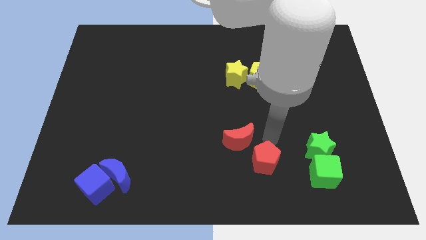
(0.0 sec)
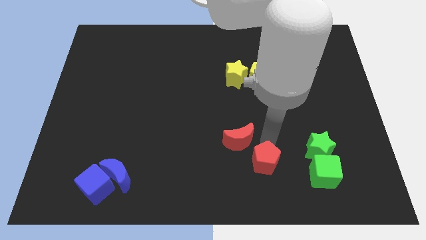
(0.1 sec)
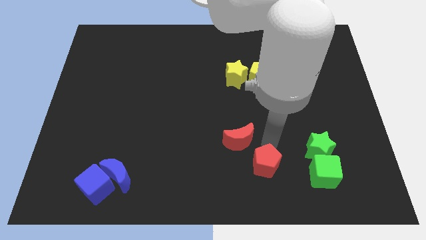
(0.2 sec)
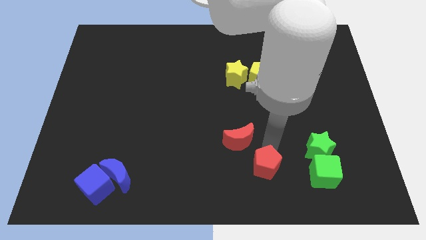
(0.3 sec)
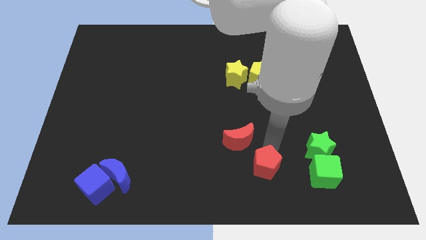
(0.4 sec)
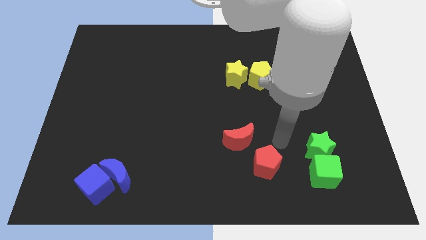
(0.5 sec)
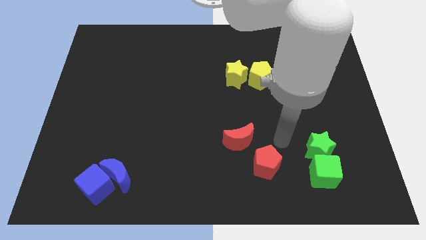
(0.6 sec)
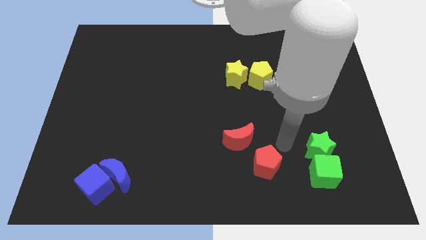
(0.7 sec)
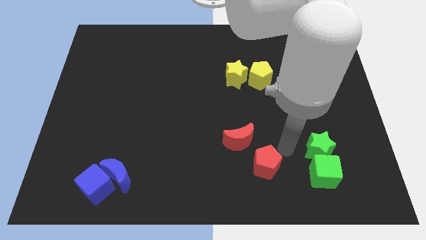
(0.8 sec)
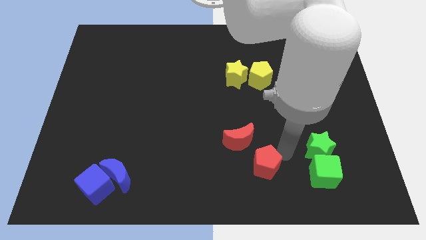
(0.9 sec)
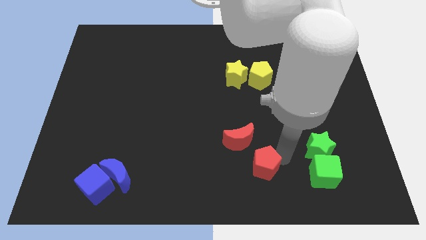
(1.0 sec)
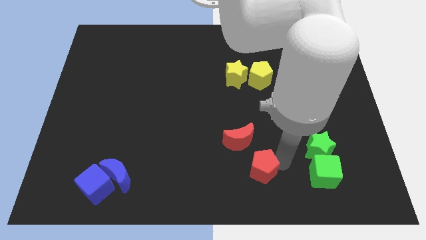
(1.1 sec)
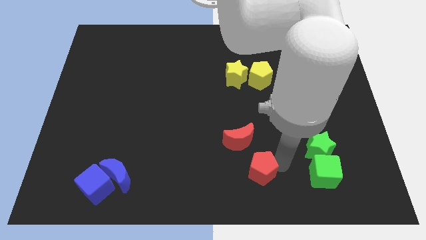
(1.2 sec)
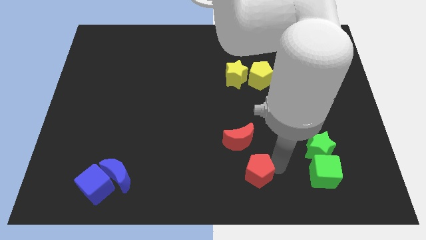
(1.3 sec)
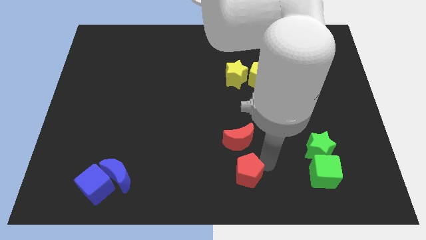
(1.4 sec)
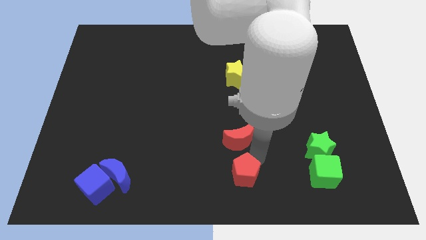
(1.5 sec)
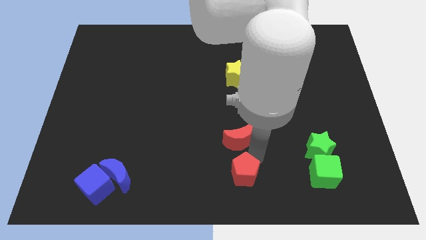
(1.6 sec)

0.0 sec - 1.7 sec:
place the red pentagon below the red moon

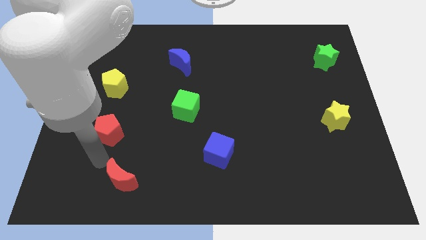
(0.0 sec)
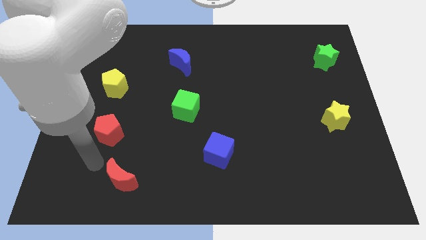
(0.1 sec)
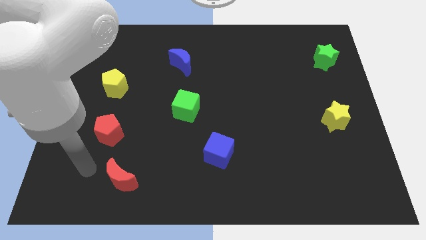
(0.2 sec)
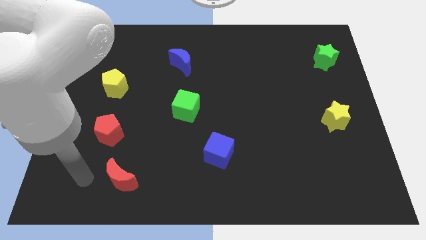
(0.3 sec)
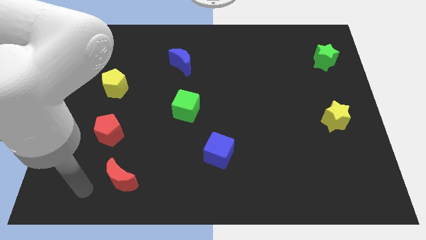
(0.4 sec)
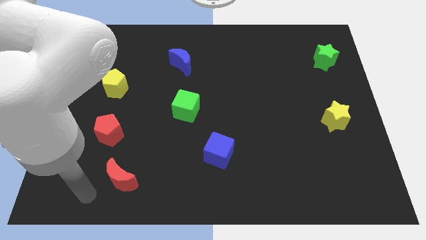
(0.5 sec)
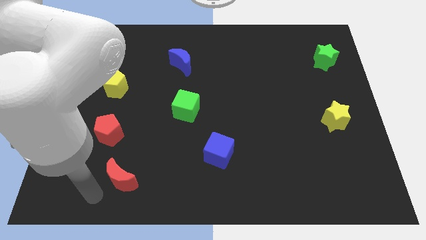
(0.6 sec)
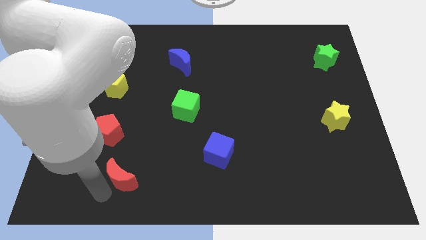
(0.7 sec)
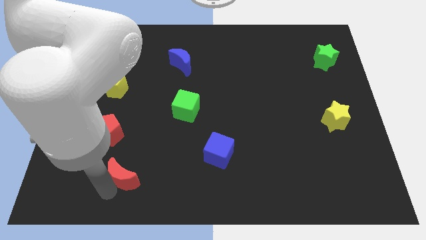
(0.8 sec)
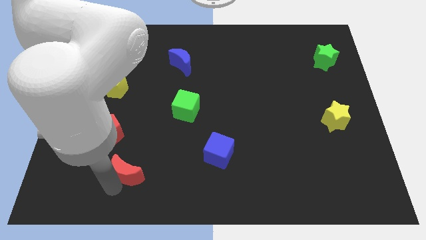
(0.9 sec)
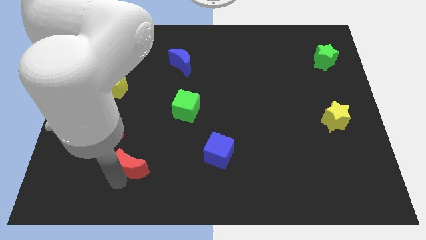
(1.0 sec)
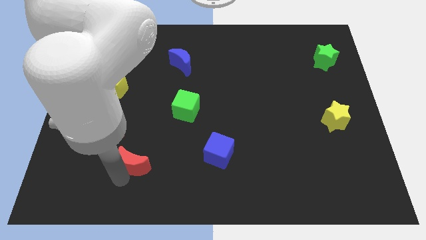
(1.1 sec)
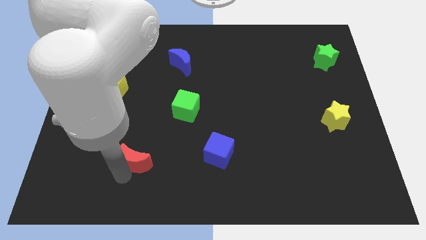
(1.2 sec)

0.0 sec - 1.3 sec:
place the red moon diagonal to the red pentagon

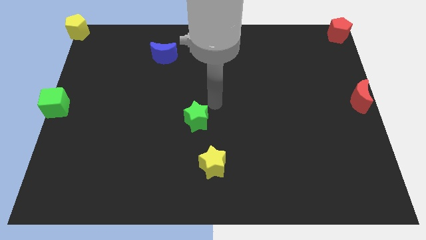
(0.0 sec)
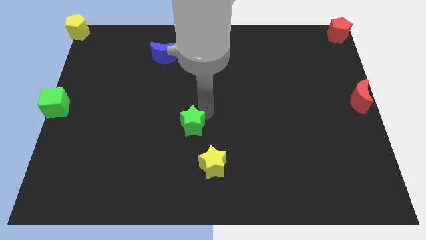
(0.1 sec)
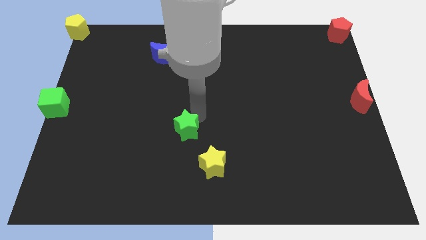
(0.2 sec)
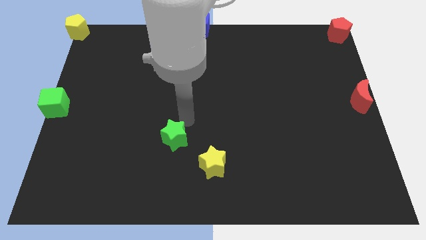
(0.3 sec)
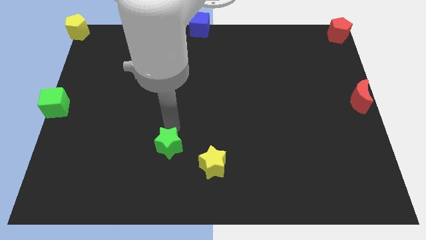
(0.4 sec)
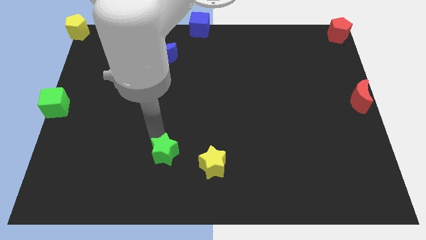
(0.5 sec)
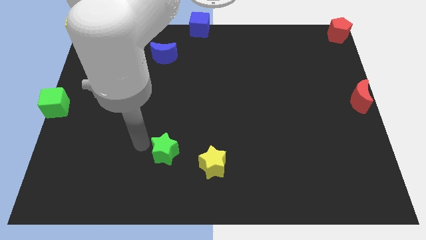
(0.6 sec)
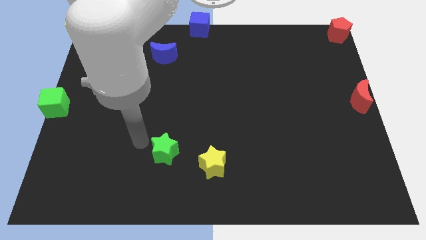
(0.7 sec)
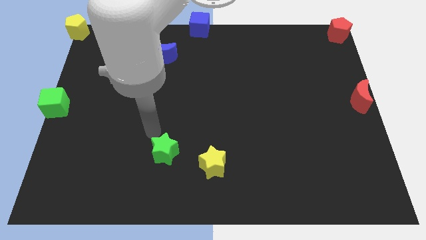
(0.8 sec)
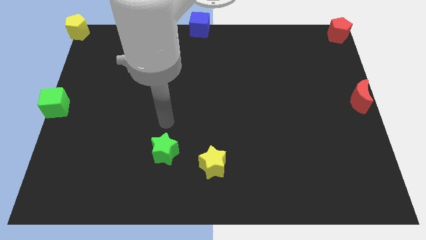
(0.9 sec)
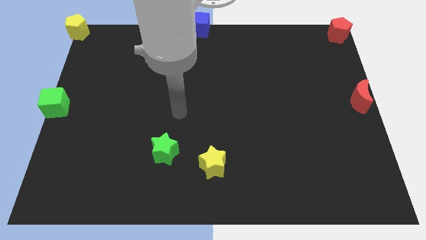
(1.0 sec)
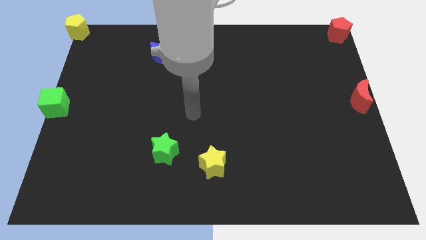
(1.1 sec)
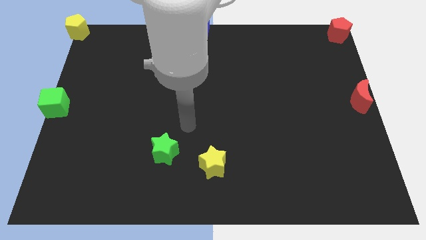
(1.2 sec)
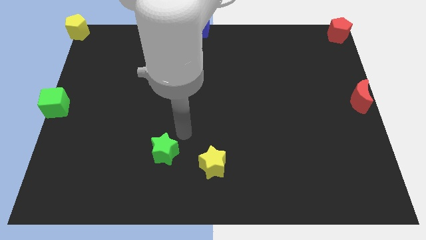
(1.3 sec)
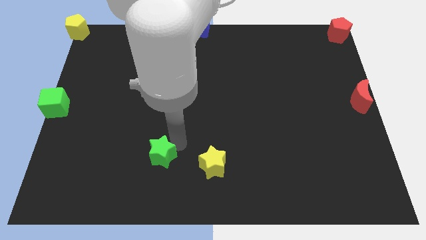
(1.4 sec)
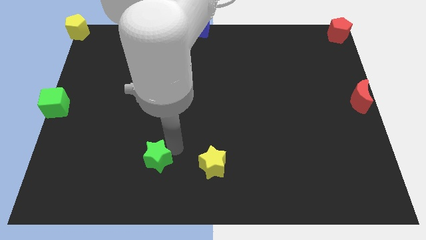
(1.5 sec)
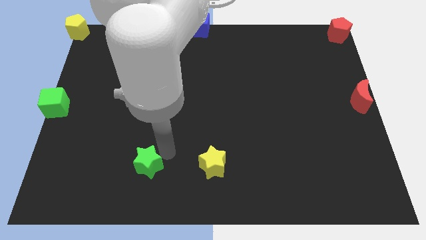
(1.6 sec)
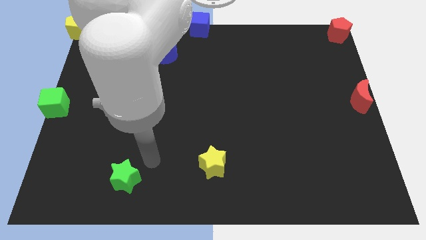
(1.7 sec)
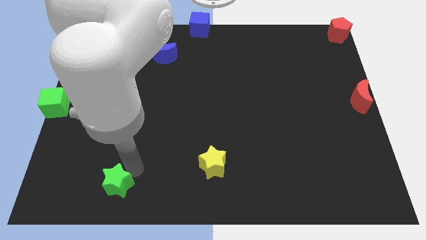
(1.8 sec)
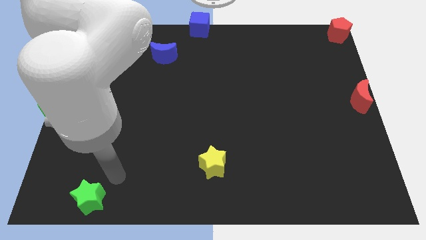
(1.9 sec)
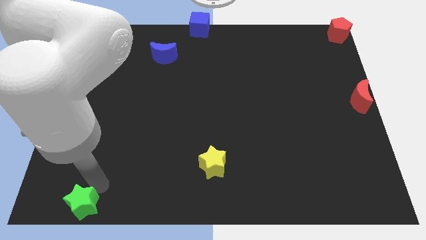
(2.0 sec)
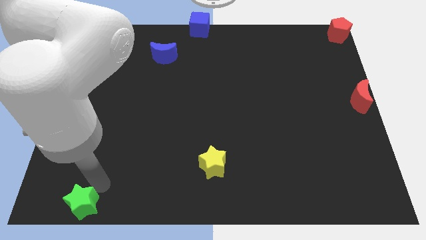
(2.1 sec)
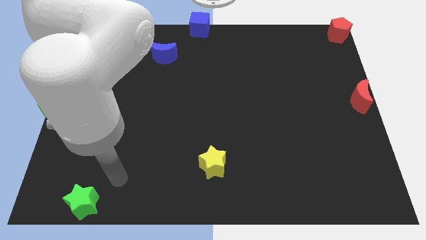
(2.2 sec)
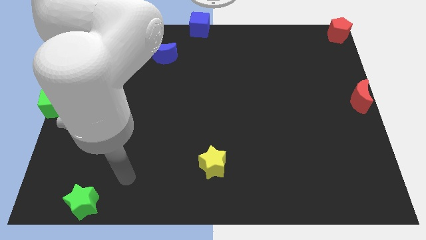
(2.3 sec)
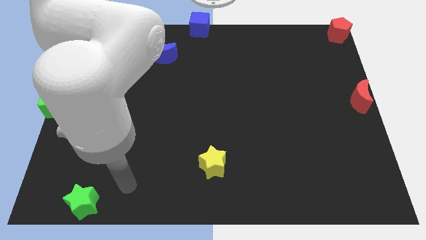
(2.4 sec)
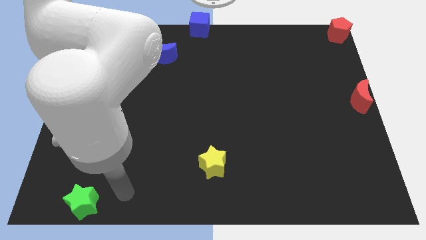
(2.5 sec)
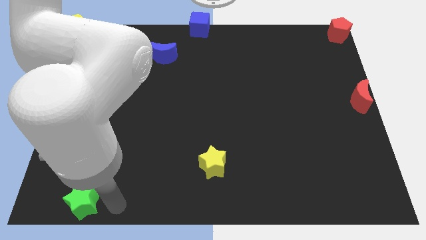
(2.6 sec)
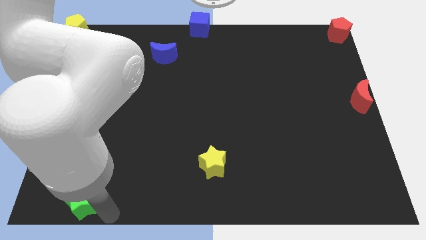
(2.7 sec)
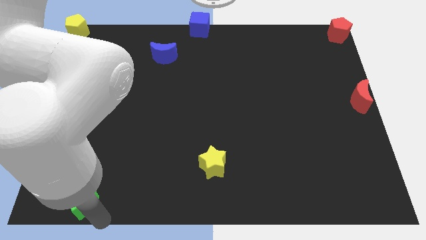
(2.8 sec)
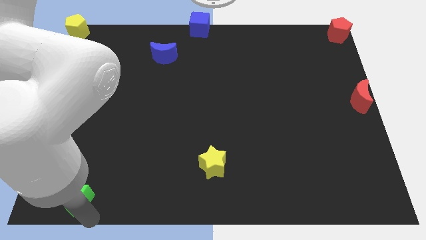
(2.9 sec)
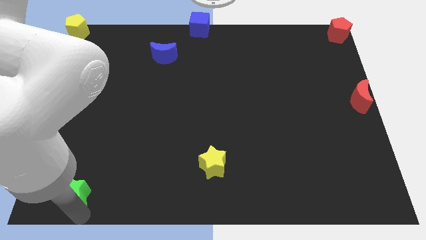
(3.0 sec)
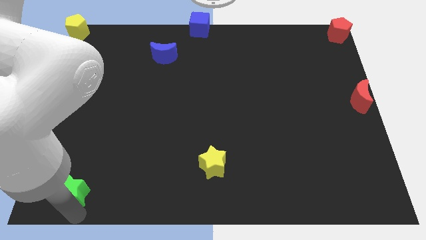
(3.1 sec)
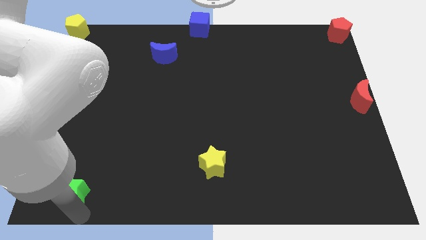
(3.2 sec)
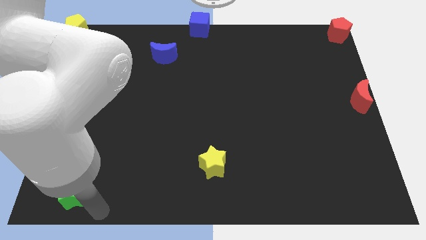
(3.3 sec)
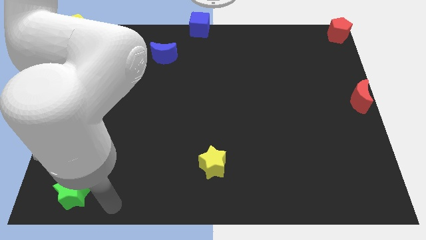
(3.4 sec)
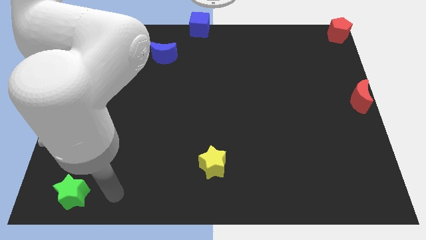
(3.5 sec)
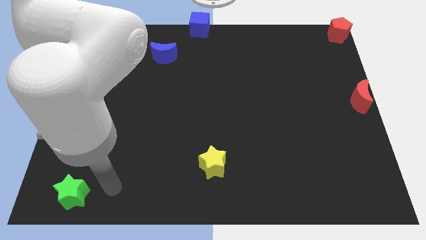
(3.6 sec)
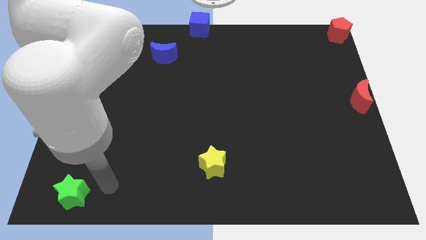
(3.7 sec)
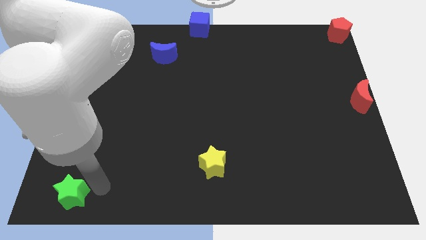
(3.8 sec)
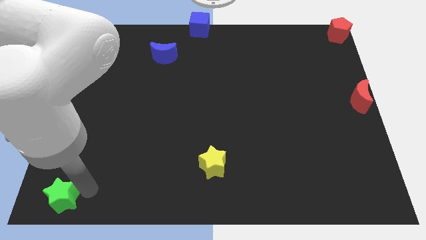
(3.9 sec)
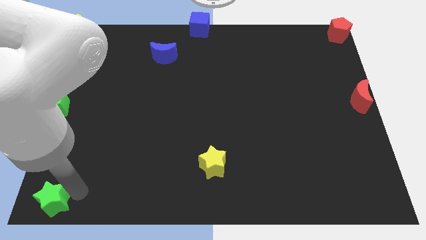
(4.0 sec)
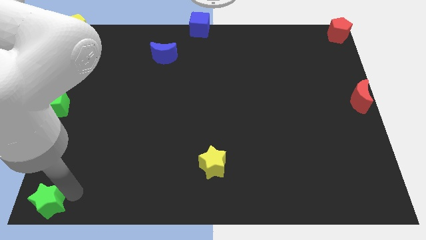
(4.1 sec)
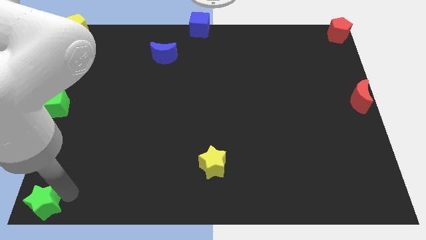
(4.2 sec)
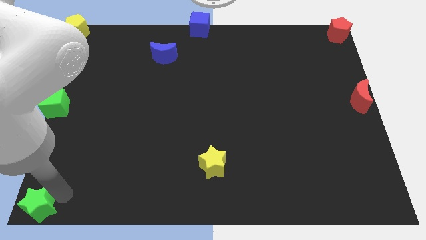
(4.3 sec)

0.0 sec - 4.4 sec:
move the green star to the bottom left corner of the board

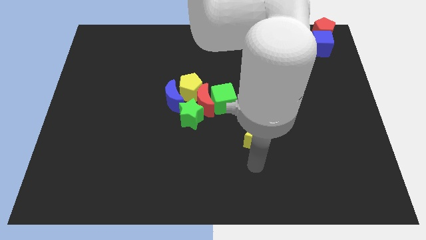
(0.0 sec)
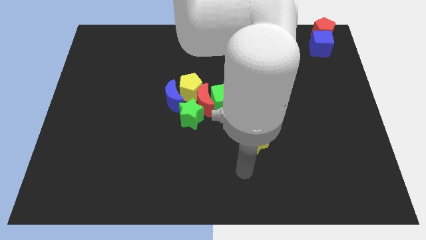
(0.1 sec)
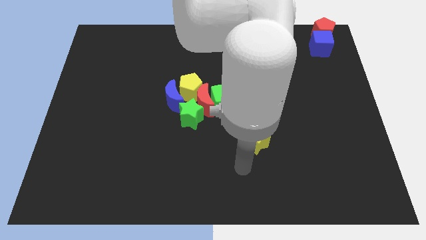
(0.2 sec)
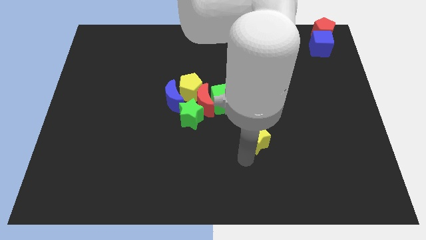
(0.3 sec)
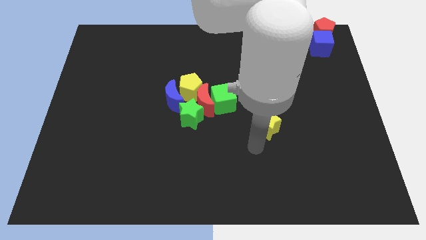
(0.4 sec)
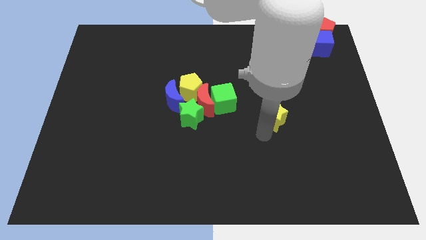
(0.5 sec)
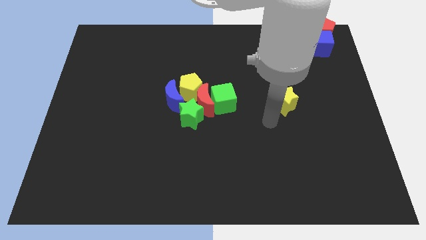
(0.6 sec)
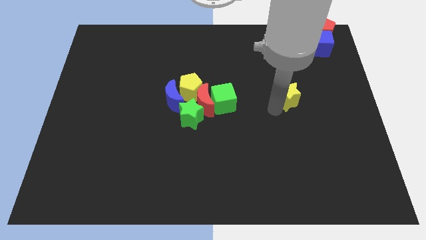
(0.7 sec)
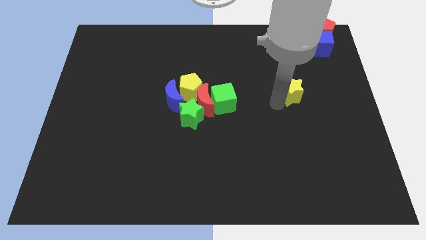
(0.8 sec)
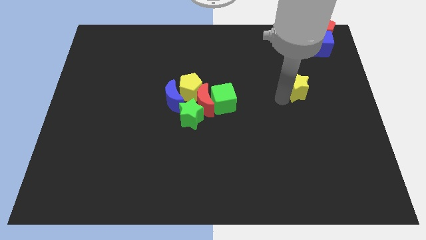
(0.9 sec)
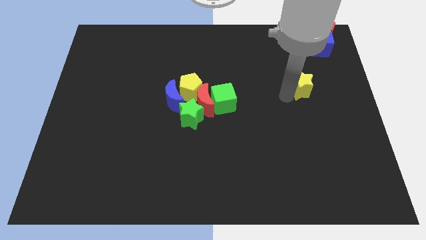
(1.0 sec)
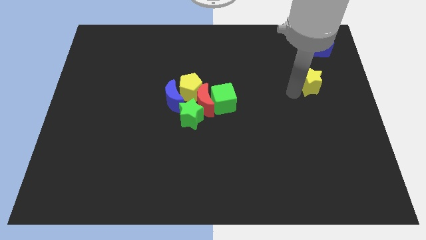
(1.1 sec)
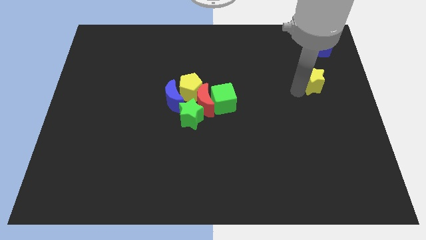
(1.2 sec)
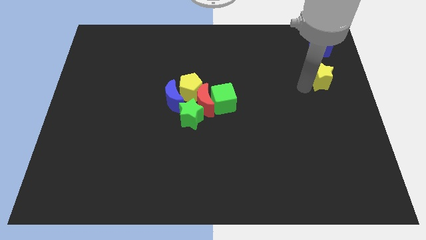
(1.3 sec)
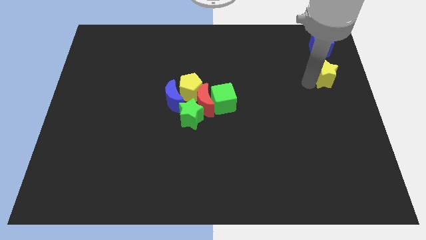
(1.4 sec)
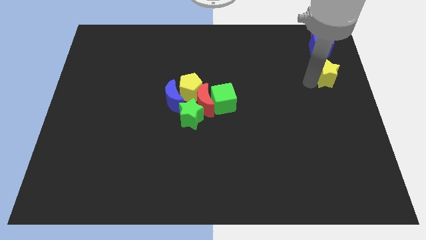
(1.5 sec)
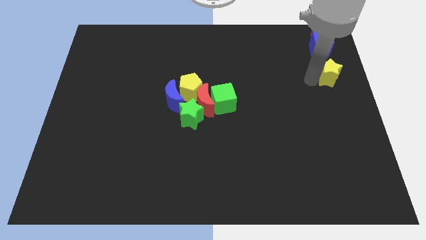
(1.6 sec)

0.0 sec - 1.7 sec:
move the yellow star to the bottom of the blue cube

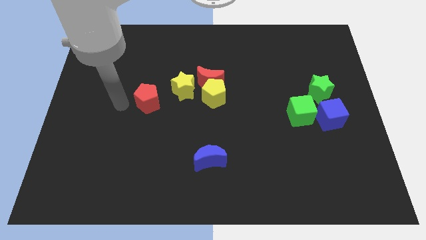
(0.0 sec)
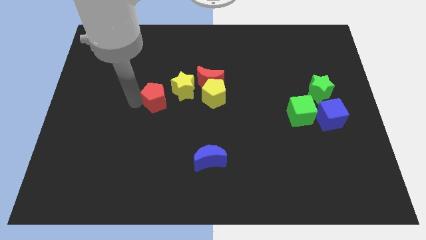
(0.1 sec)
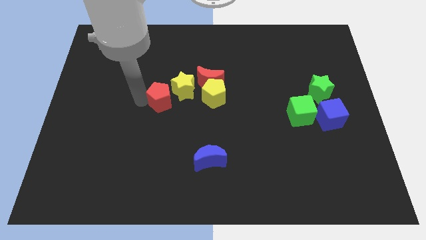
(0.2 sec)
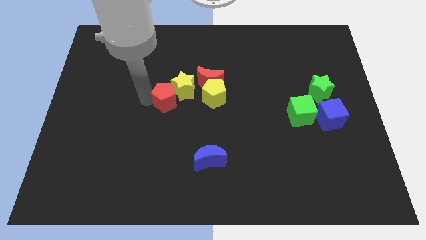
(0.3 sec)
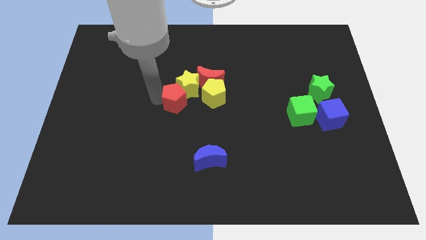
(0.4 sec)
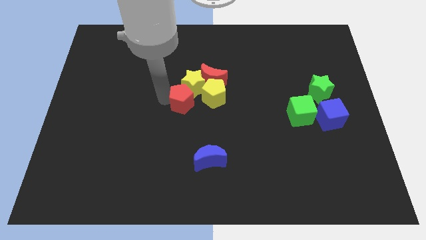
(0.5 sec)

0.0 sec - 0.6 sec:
push the red pentagon into the yellow star
